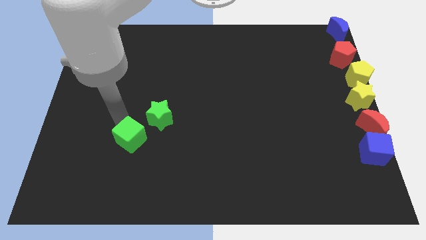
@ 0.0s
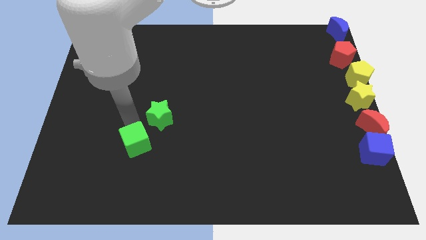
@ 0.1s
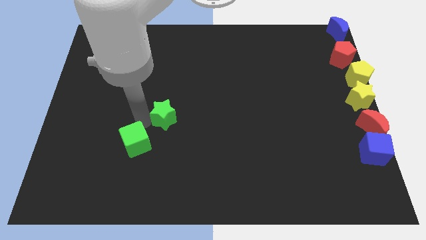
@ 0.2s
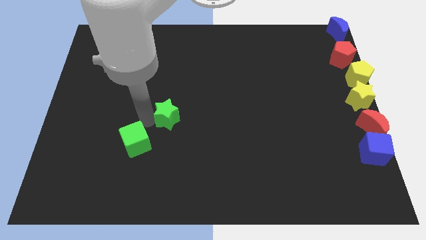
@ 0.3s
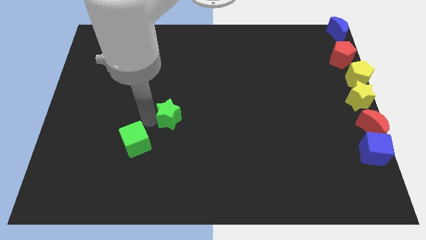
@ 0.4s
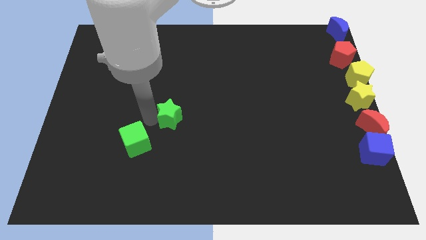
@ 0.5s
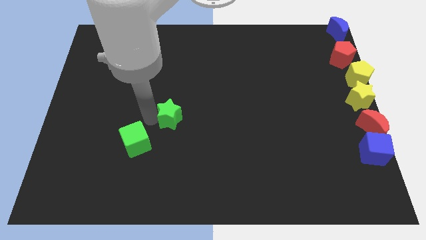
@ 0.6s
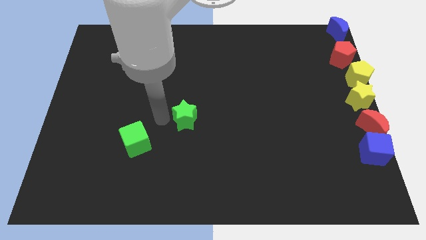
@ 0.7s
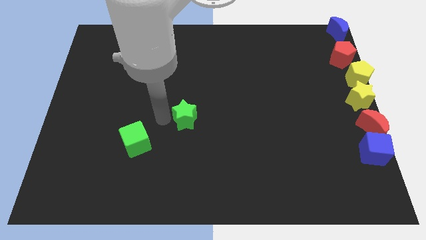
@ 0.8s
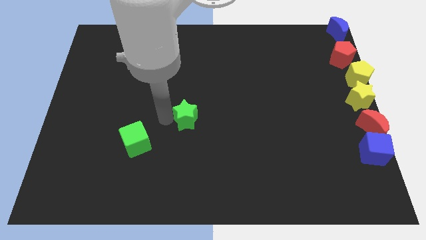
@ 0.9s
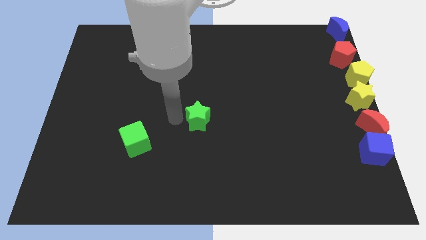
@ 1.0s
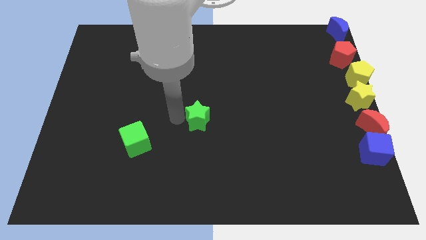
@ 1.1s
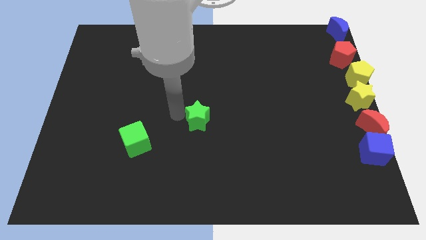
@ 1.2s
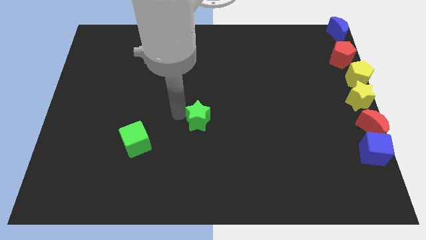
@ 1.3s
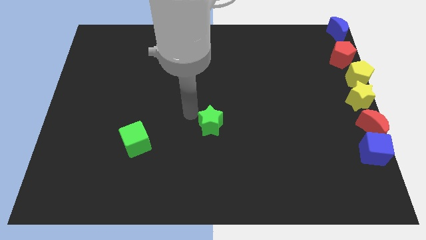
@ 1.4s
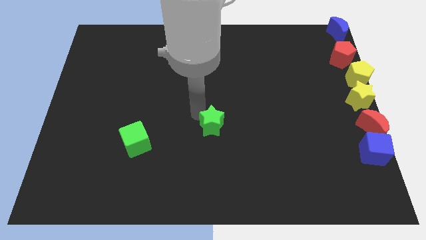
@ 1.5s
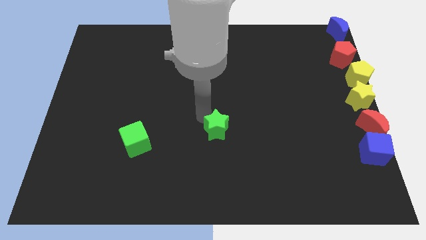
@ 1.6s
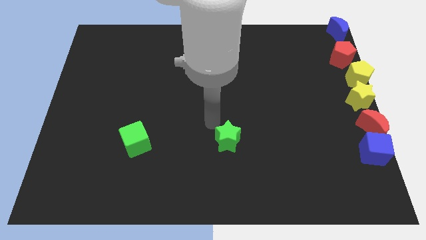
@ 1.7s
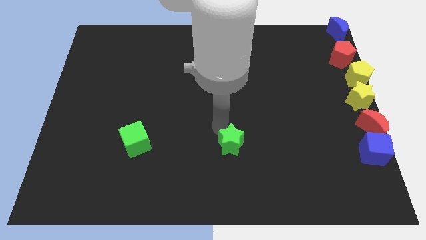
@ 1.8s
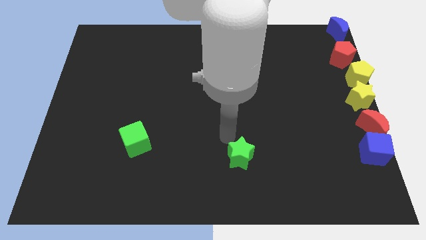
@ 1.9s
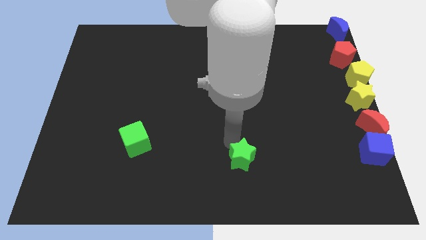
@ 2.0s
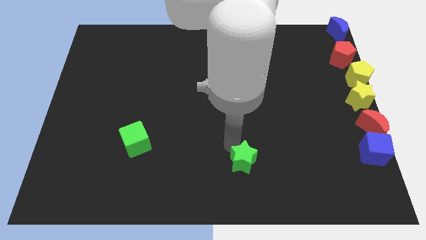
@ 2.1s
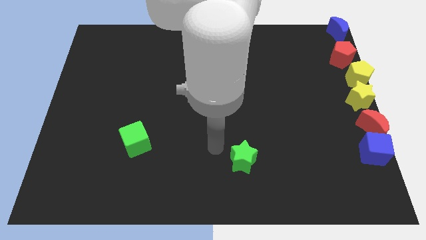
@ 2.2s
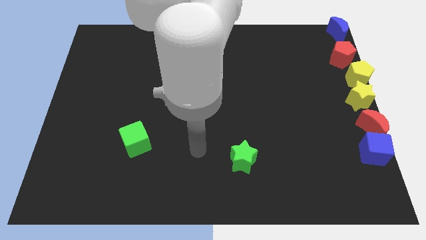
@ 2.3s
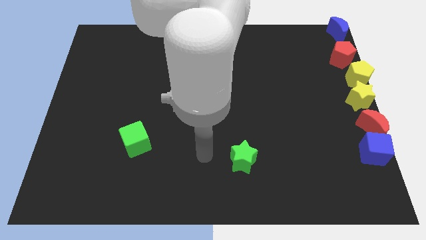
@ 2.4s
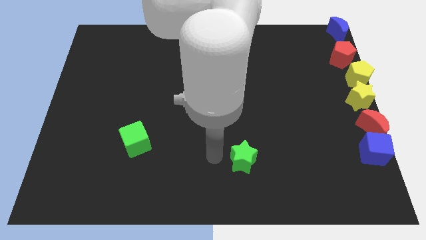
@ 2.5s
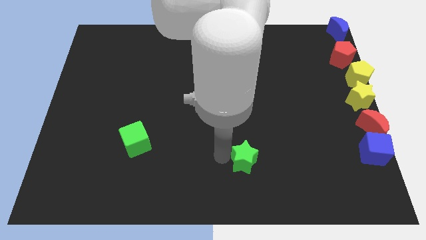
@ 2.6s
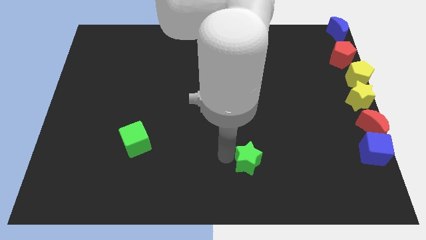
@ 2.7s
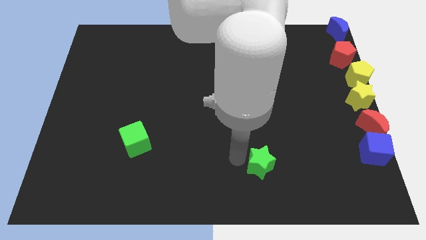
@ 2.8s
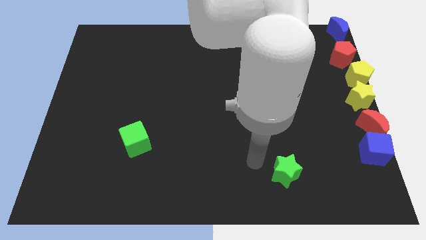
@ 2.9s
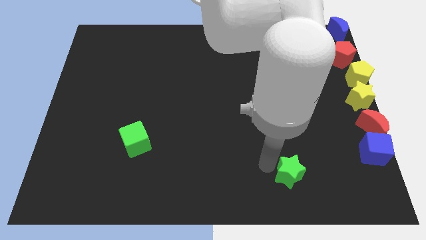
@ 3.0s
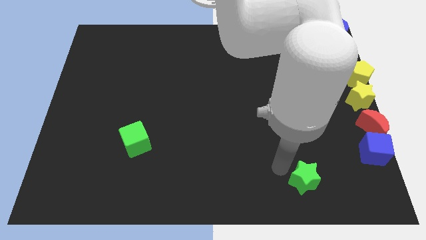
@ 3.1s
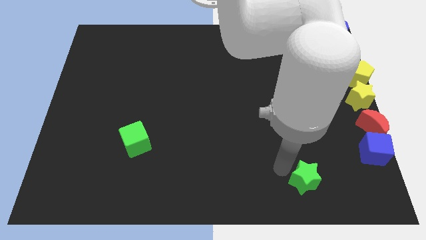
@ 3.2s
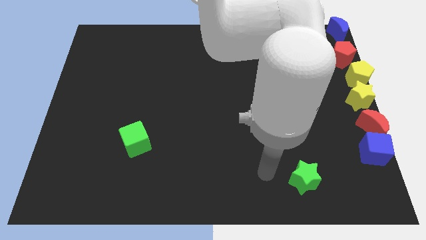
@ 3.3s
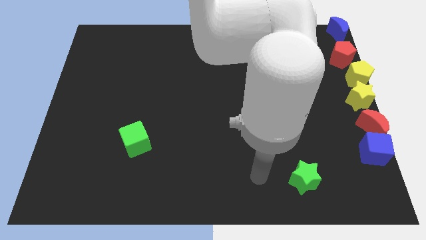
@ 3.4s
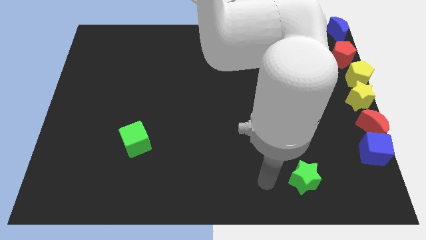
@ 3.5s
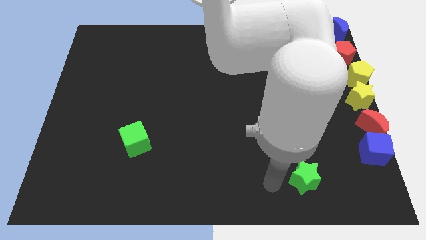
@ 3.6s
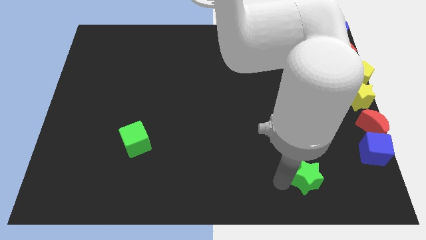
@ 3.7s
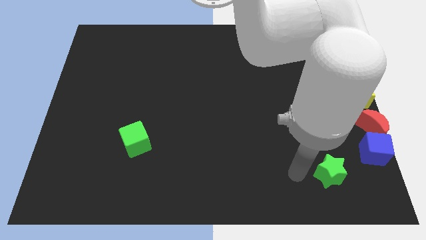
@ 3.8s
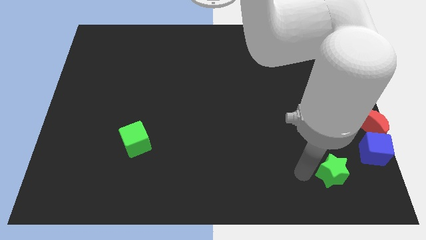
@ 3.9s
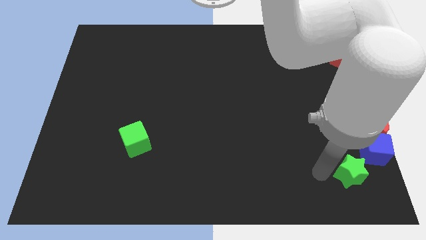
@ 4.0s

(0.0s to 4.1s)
slide the green star diagonally bottom right to the green cube

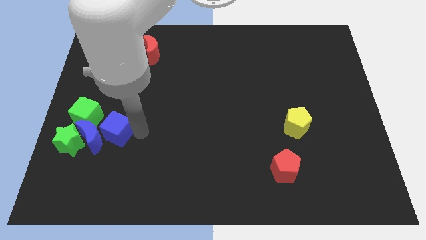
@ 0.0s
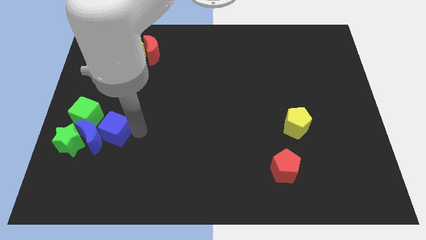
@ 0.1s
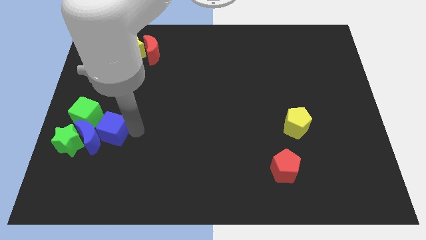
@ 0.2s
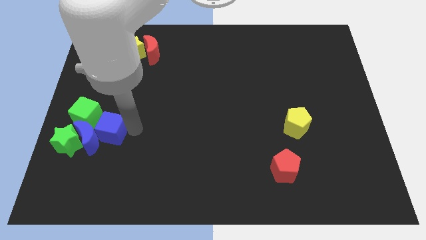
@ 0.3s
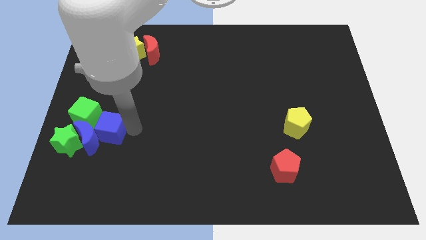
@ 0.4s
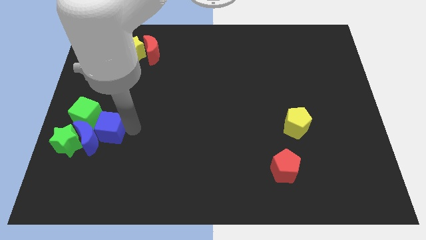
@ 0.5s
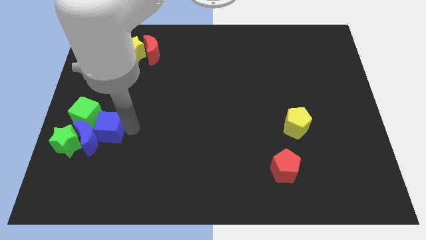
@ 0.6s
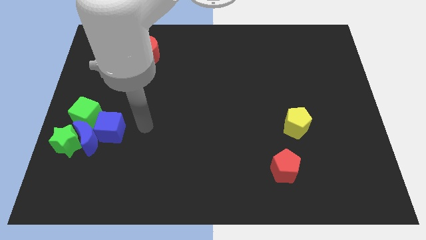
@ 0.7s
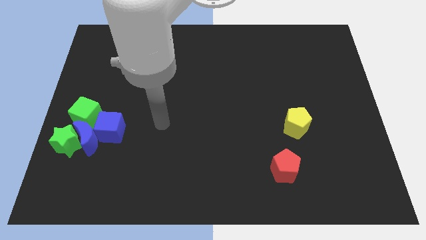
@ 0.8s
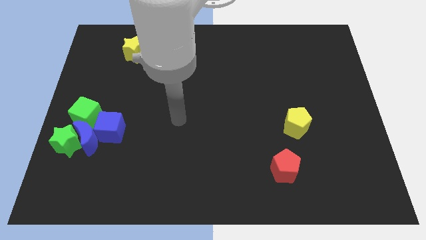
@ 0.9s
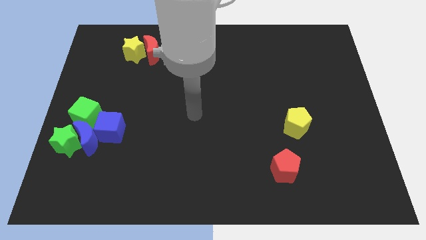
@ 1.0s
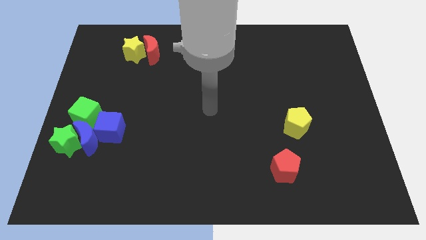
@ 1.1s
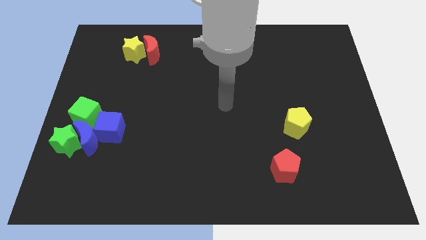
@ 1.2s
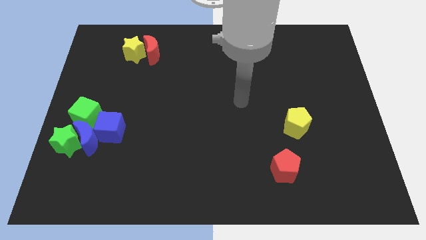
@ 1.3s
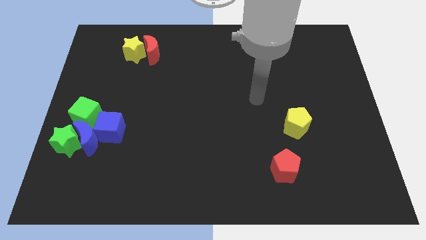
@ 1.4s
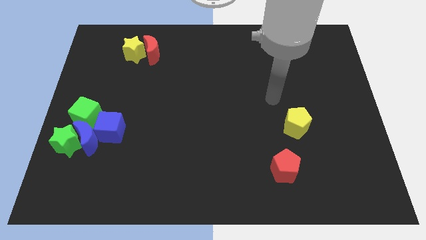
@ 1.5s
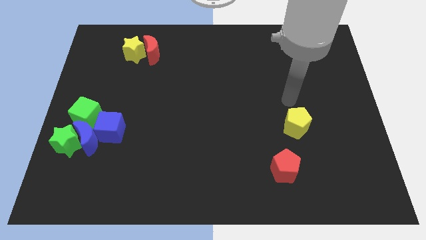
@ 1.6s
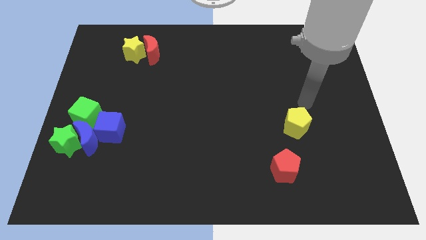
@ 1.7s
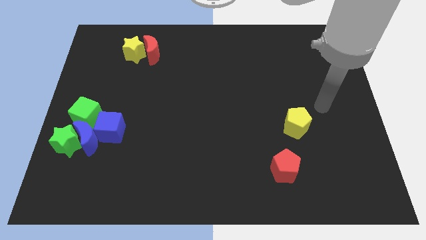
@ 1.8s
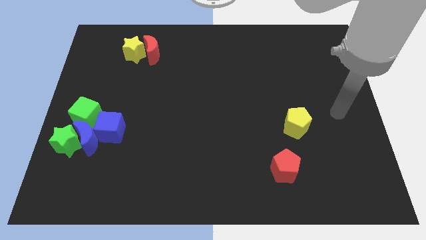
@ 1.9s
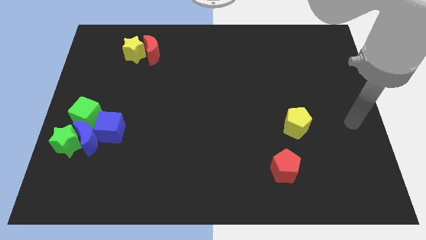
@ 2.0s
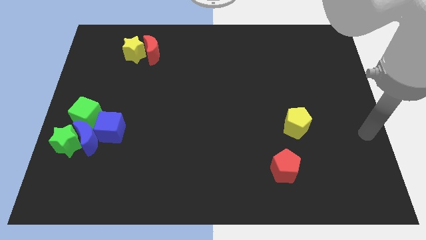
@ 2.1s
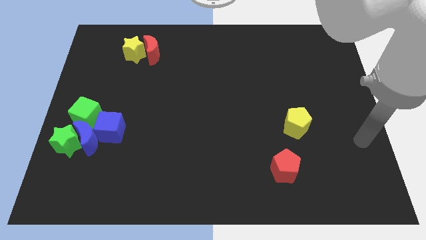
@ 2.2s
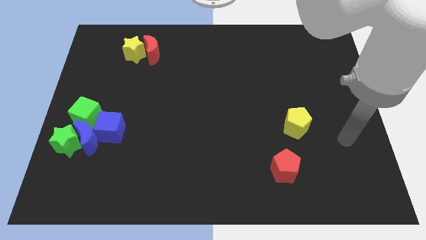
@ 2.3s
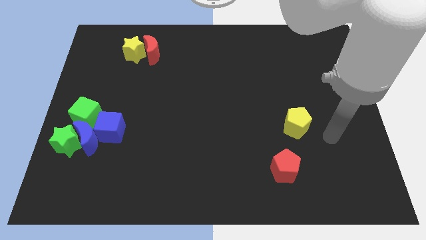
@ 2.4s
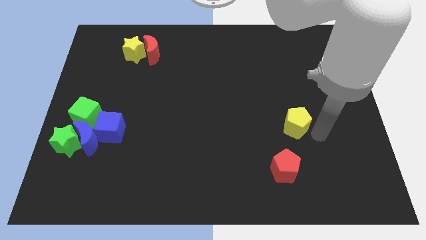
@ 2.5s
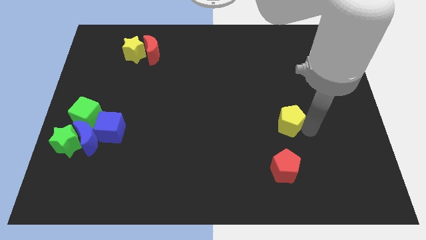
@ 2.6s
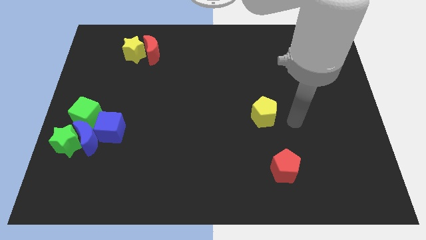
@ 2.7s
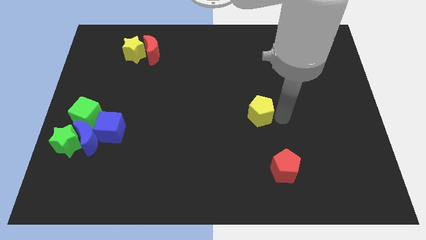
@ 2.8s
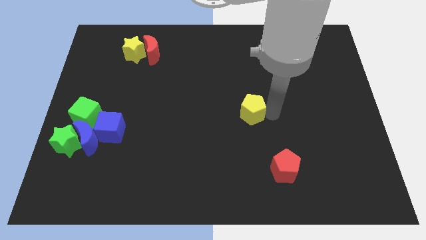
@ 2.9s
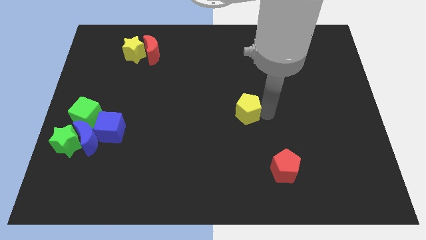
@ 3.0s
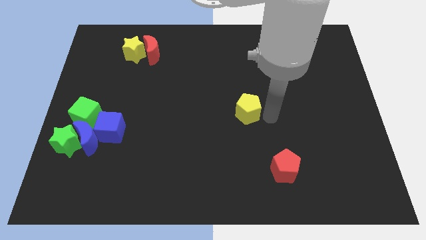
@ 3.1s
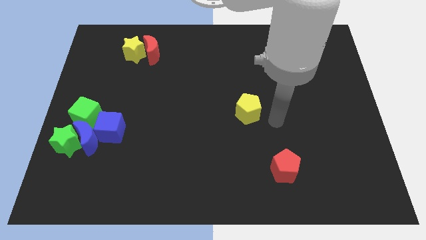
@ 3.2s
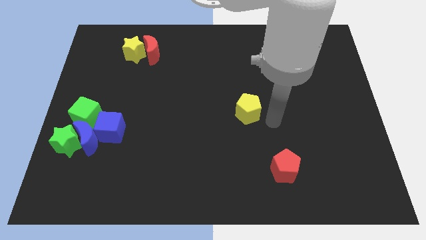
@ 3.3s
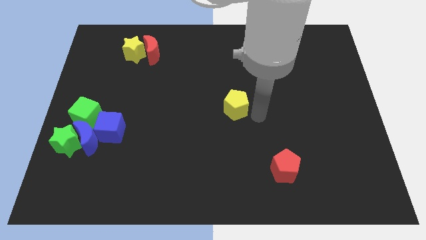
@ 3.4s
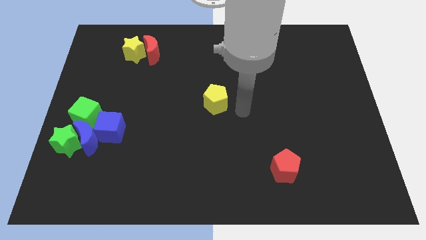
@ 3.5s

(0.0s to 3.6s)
move the yellow pentagon to right of the blue cube

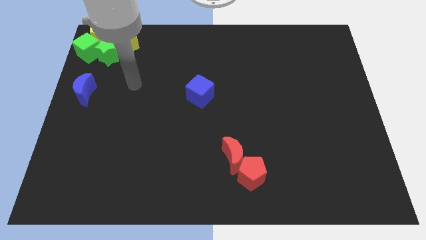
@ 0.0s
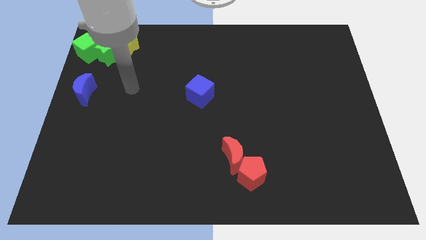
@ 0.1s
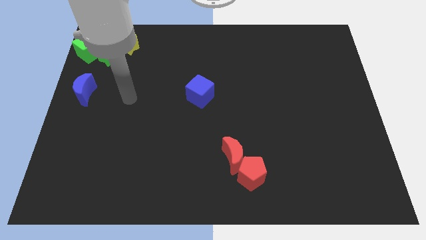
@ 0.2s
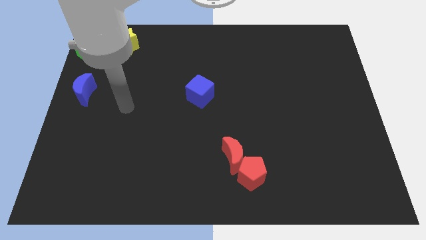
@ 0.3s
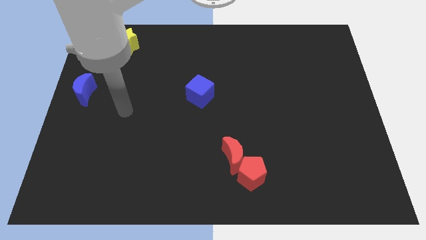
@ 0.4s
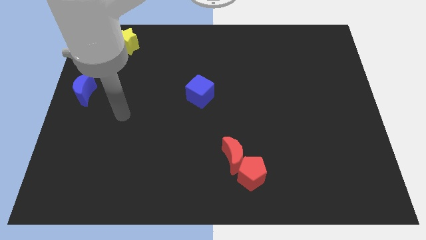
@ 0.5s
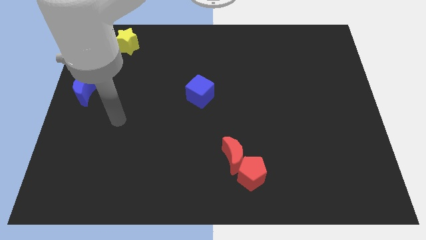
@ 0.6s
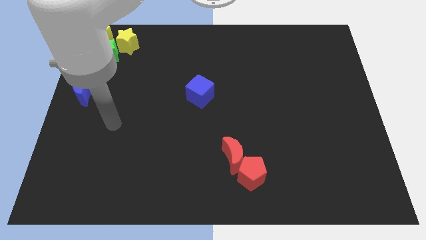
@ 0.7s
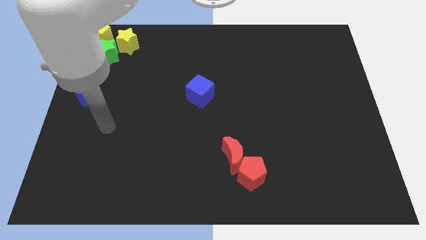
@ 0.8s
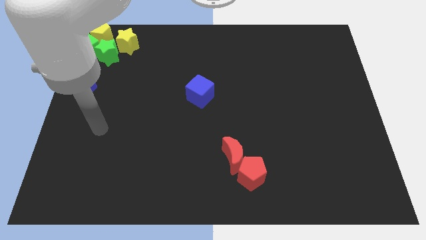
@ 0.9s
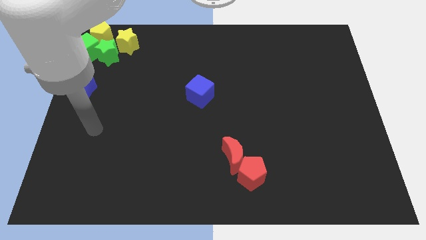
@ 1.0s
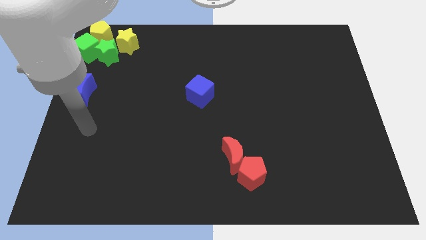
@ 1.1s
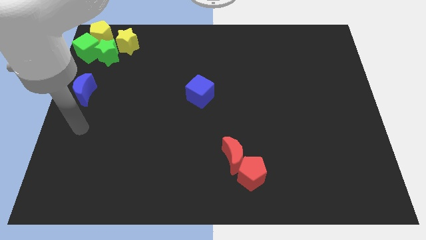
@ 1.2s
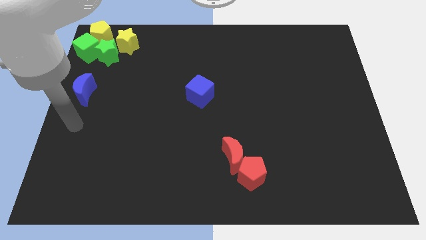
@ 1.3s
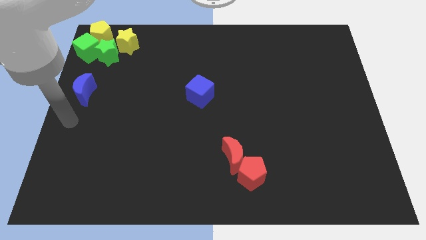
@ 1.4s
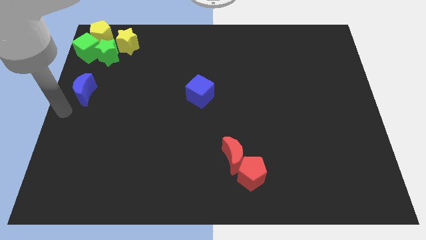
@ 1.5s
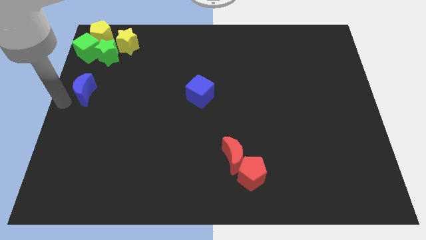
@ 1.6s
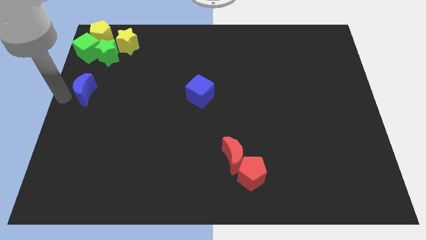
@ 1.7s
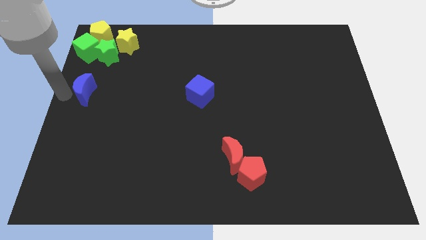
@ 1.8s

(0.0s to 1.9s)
place your hand to the left of the blue moon
